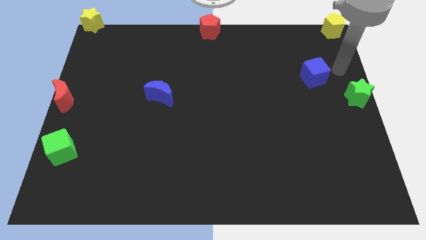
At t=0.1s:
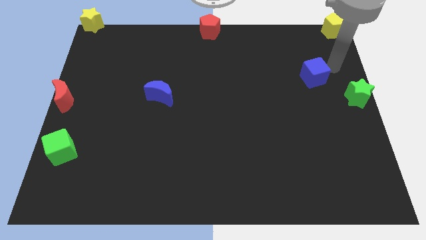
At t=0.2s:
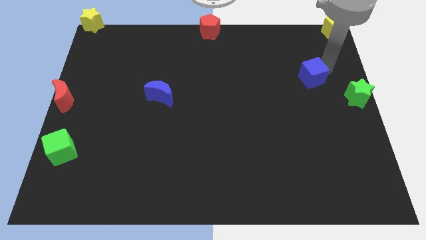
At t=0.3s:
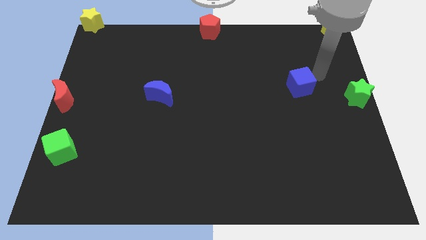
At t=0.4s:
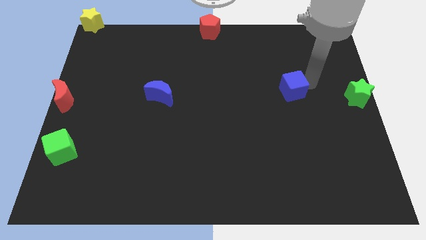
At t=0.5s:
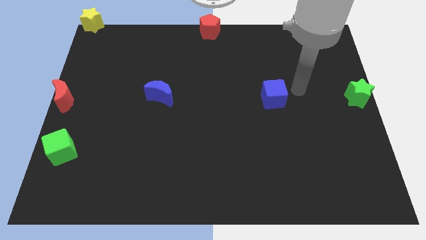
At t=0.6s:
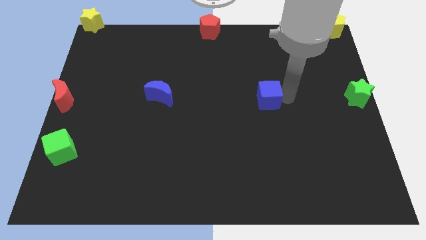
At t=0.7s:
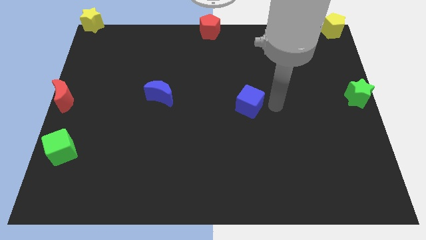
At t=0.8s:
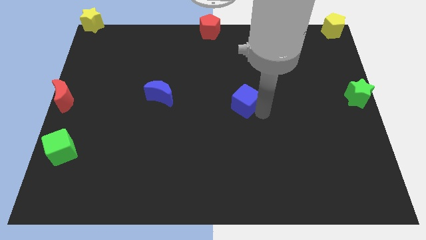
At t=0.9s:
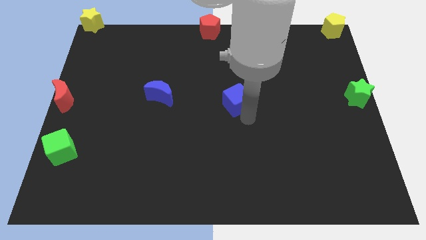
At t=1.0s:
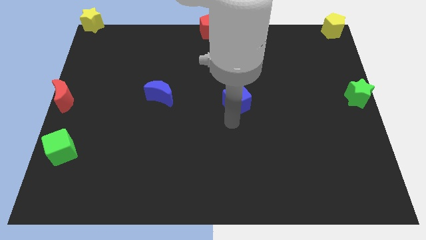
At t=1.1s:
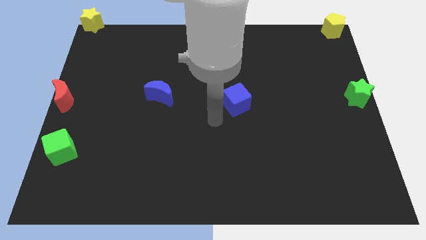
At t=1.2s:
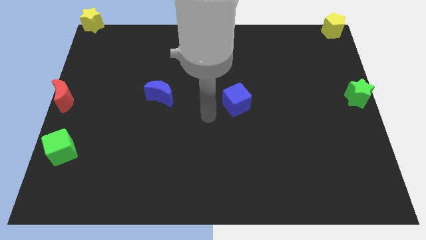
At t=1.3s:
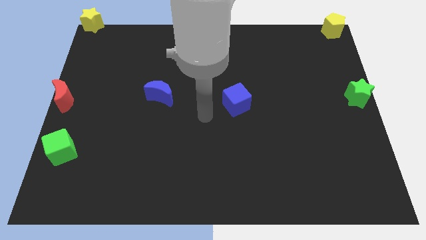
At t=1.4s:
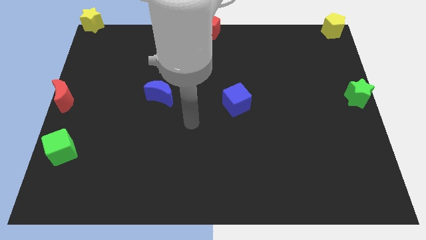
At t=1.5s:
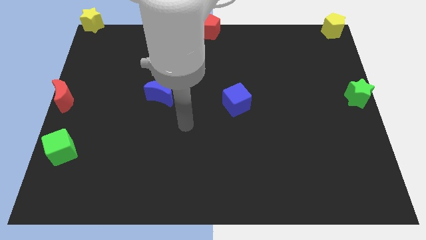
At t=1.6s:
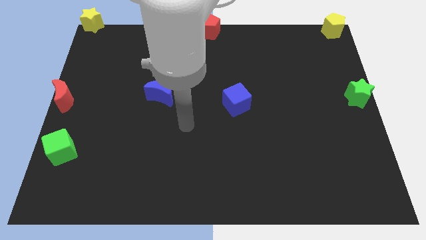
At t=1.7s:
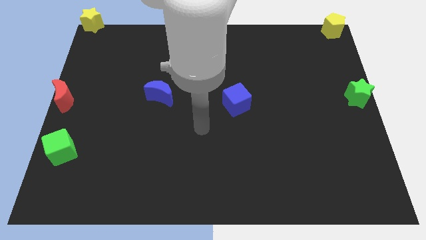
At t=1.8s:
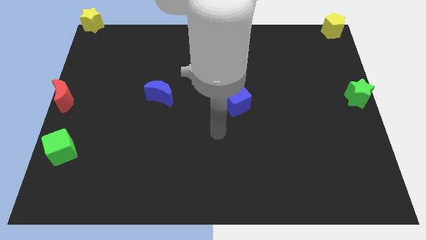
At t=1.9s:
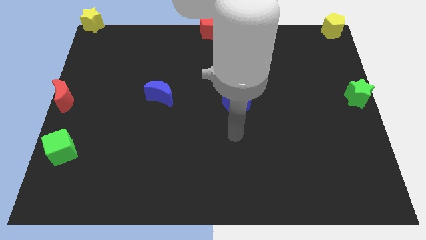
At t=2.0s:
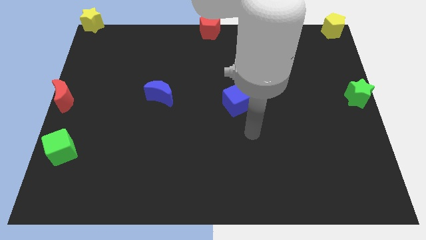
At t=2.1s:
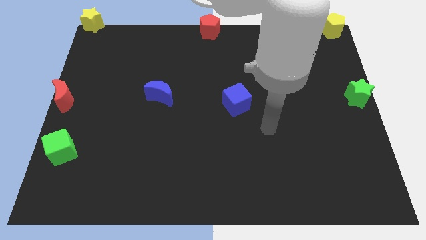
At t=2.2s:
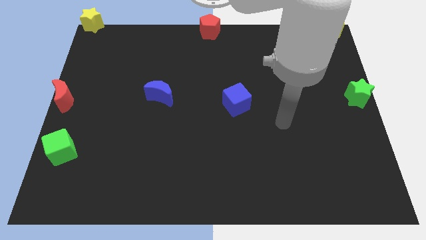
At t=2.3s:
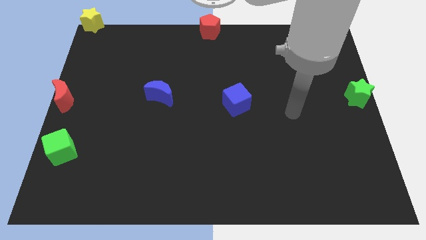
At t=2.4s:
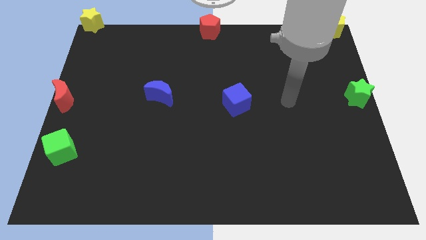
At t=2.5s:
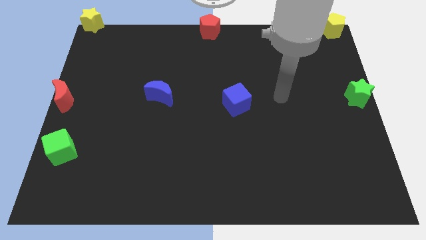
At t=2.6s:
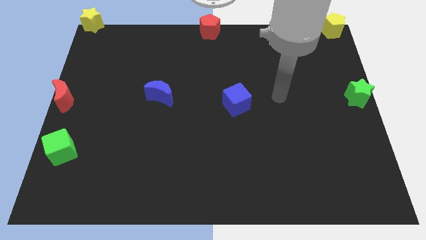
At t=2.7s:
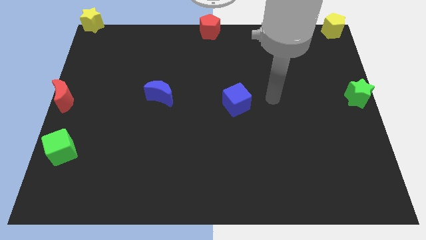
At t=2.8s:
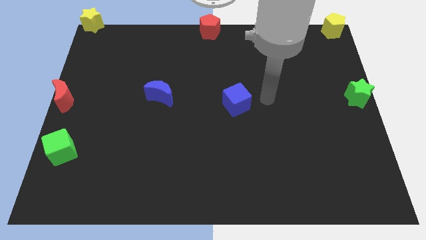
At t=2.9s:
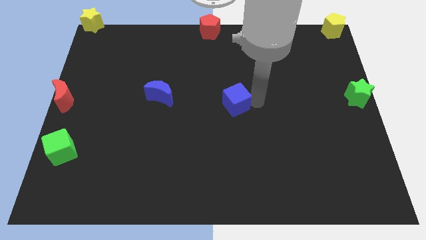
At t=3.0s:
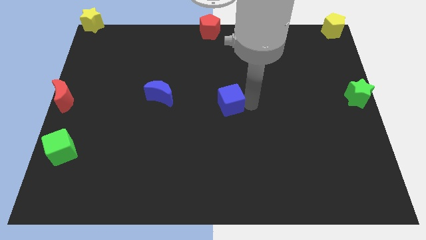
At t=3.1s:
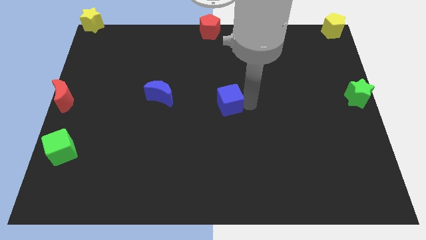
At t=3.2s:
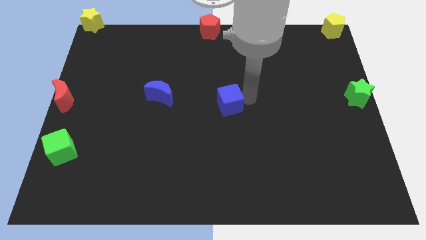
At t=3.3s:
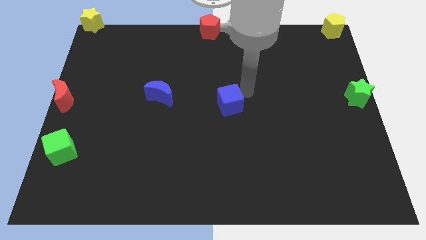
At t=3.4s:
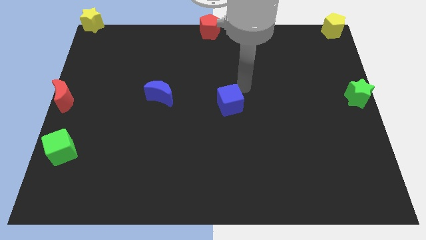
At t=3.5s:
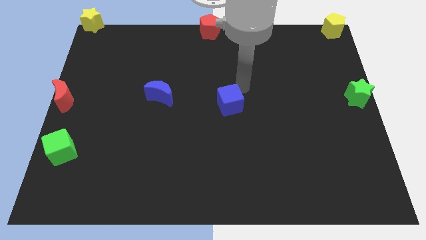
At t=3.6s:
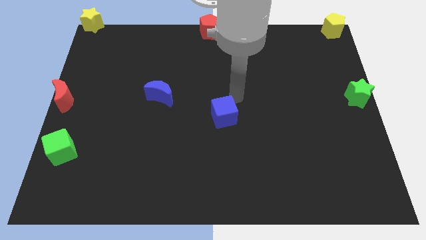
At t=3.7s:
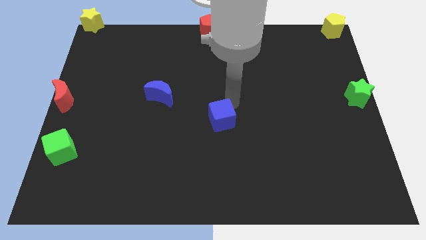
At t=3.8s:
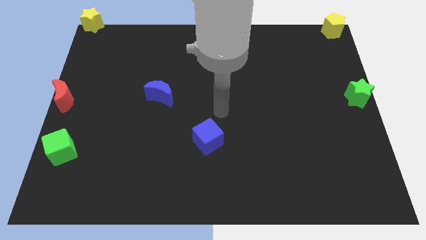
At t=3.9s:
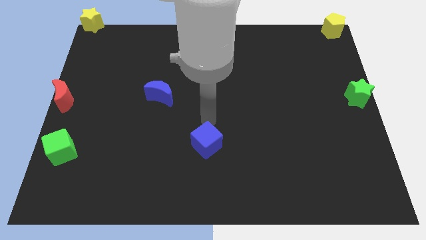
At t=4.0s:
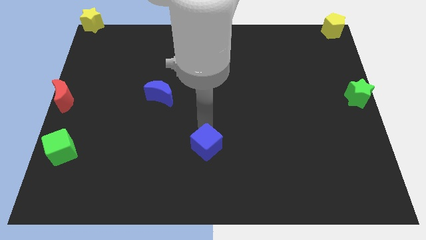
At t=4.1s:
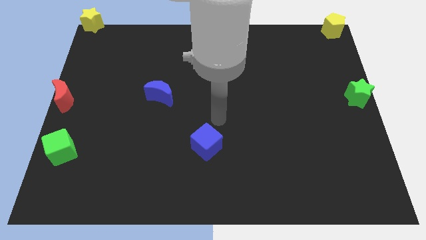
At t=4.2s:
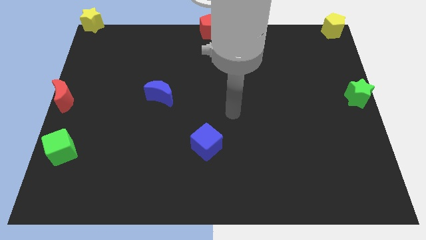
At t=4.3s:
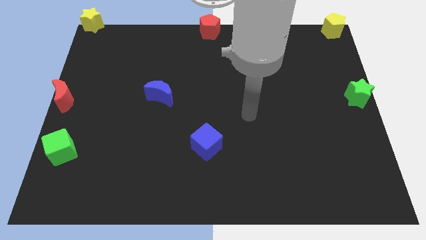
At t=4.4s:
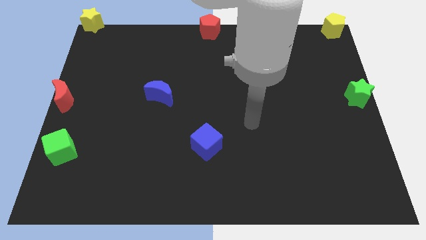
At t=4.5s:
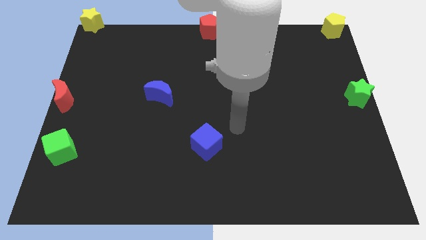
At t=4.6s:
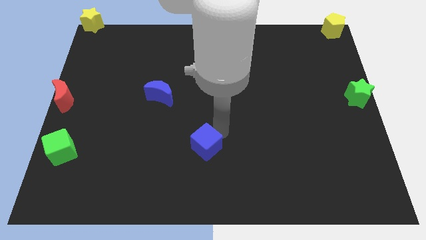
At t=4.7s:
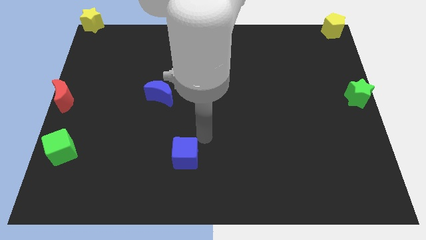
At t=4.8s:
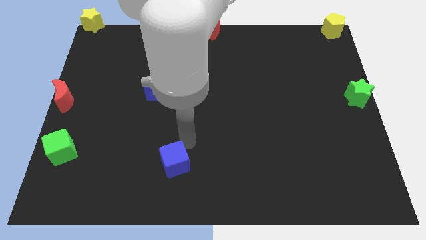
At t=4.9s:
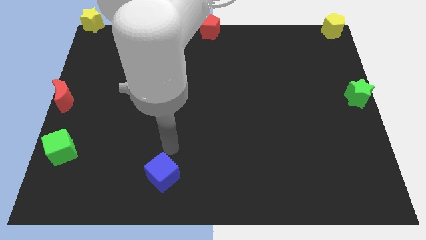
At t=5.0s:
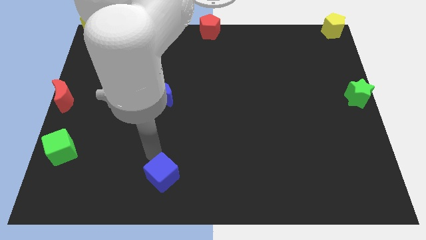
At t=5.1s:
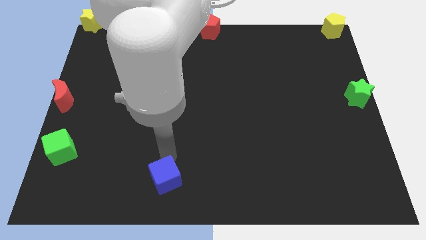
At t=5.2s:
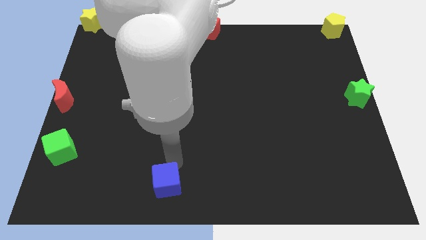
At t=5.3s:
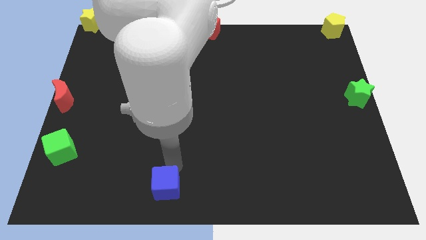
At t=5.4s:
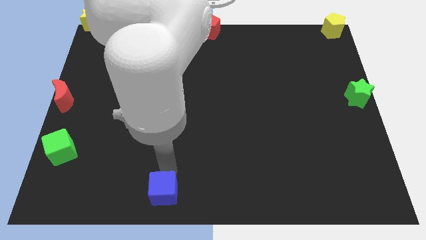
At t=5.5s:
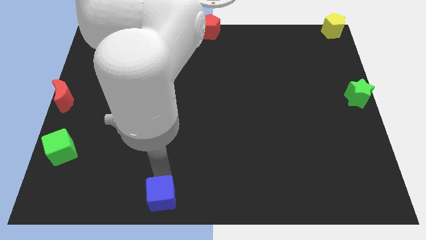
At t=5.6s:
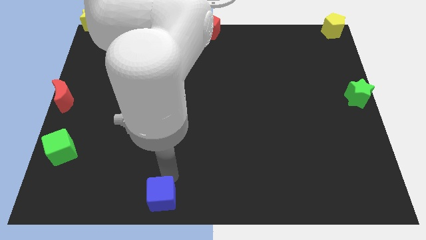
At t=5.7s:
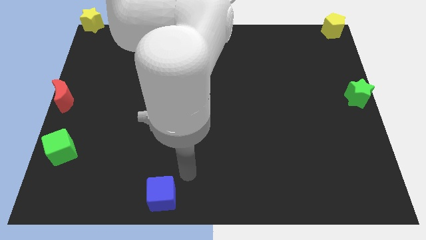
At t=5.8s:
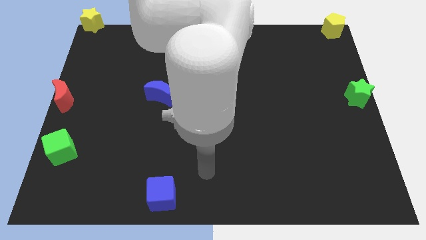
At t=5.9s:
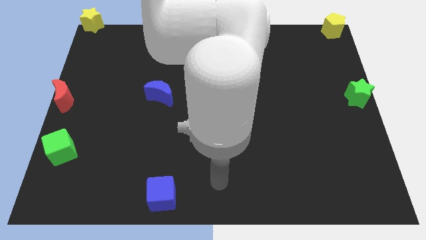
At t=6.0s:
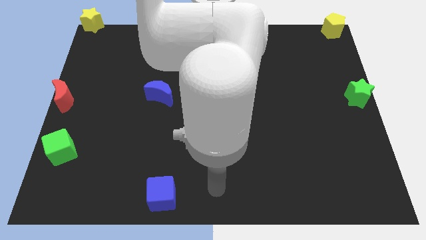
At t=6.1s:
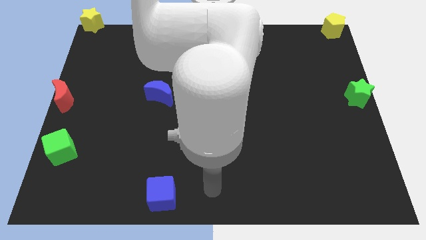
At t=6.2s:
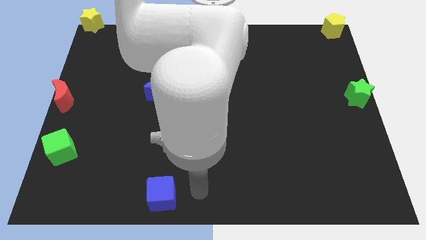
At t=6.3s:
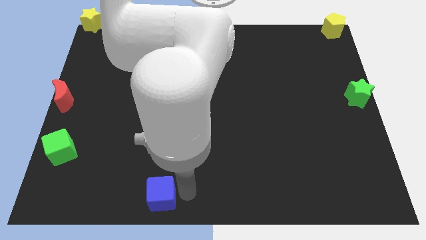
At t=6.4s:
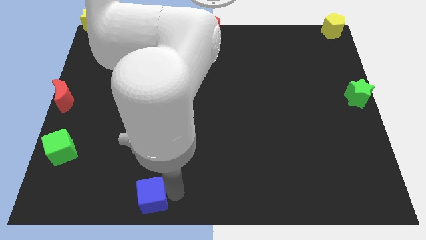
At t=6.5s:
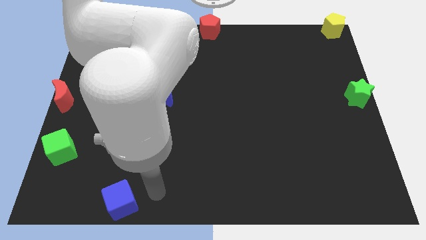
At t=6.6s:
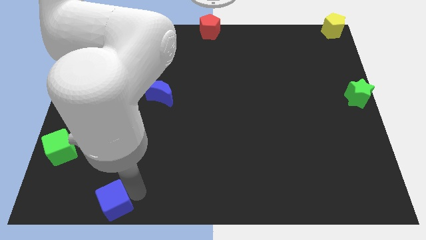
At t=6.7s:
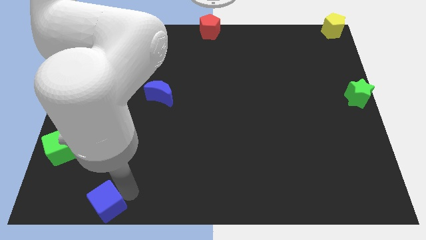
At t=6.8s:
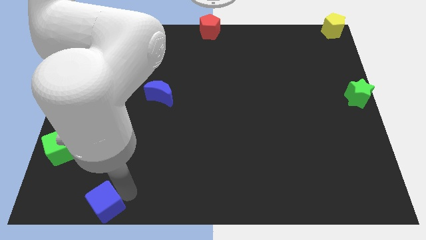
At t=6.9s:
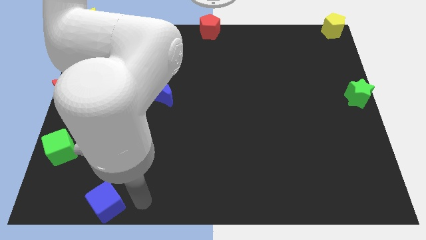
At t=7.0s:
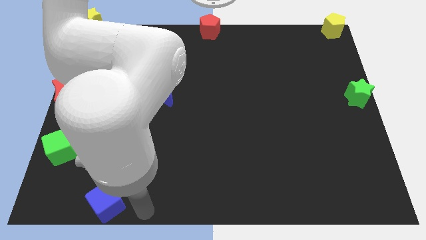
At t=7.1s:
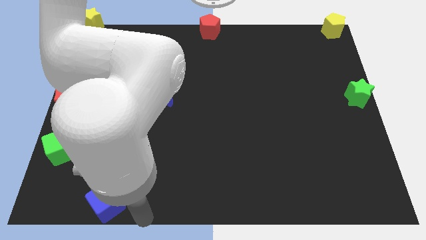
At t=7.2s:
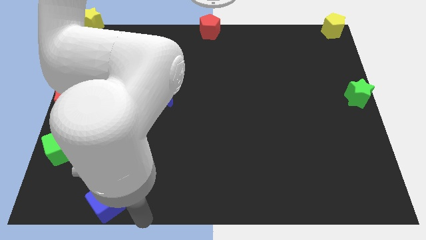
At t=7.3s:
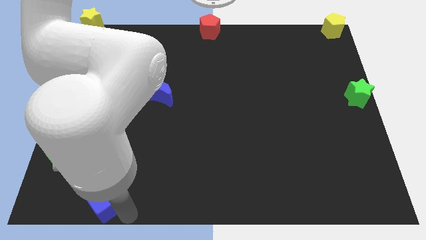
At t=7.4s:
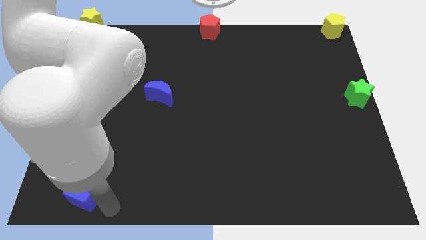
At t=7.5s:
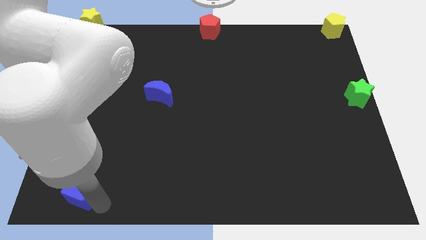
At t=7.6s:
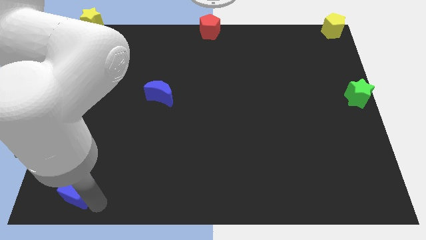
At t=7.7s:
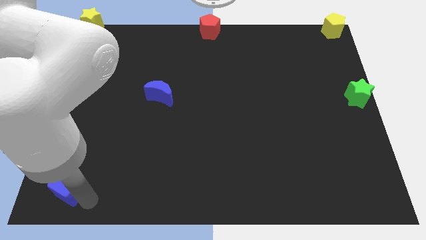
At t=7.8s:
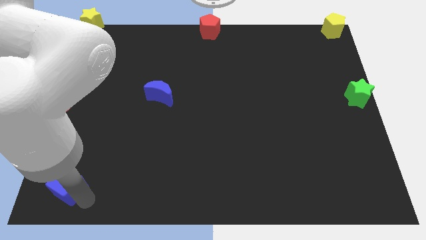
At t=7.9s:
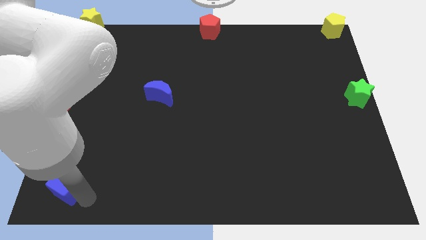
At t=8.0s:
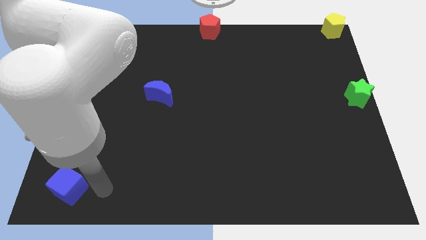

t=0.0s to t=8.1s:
move the blue cube to the bottom left side

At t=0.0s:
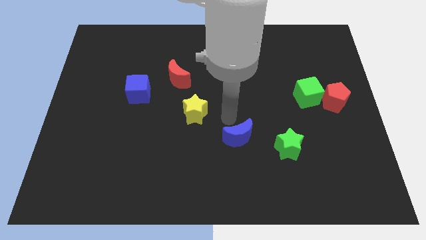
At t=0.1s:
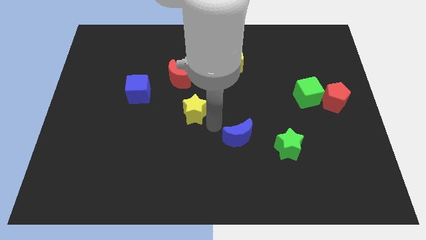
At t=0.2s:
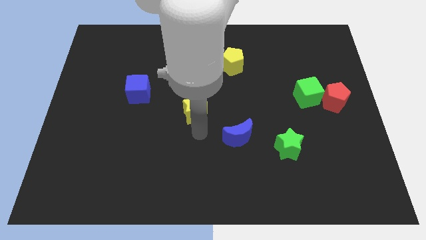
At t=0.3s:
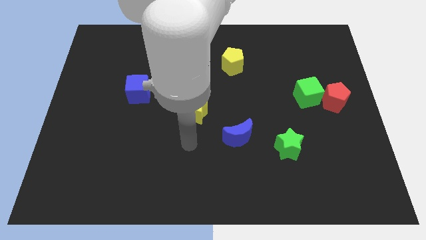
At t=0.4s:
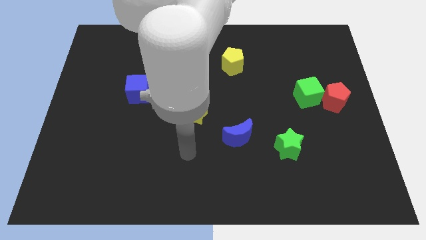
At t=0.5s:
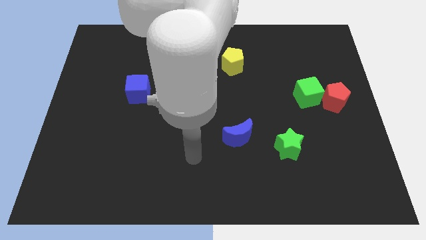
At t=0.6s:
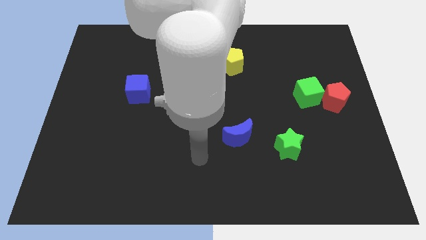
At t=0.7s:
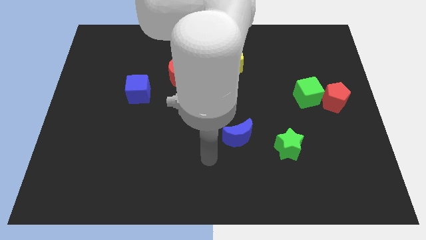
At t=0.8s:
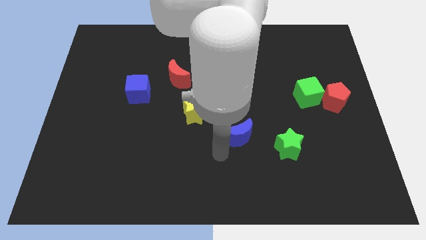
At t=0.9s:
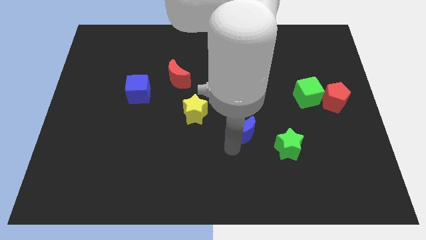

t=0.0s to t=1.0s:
put your arm at the bottom left side of blue crescent
